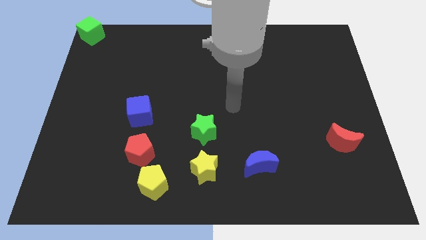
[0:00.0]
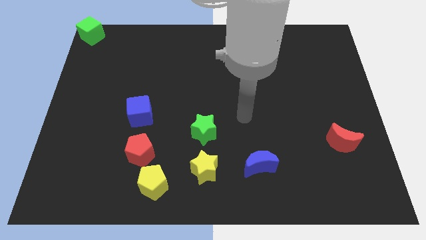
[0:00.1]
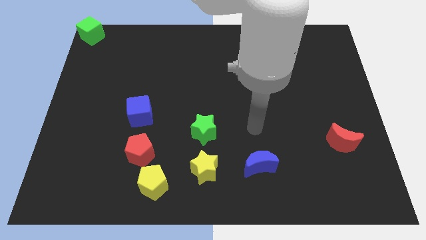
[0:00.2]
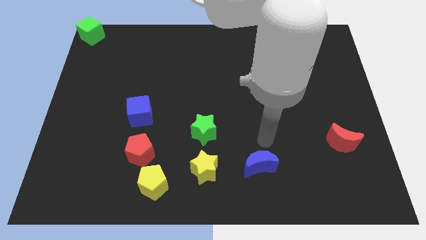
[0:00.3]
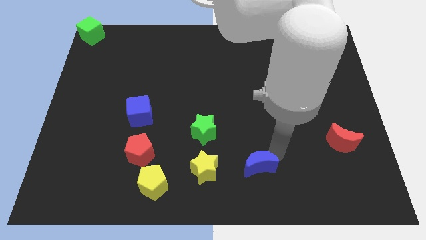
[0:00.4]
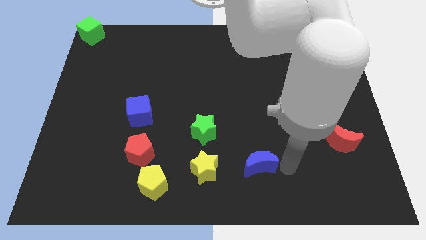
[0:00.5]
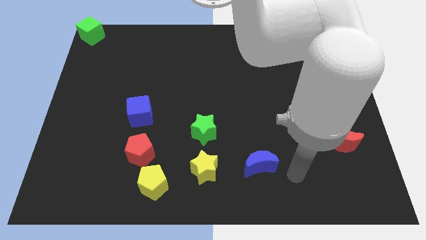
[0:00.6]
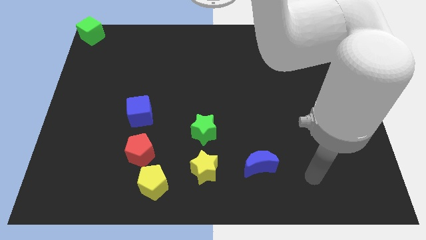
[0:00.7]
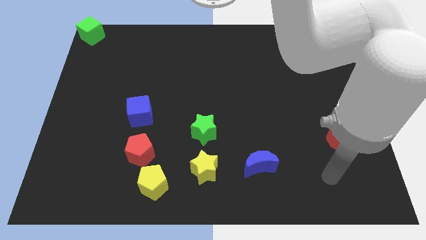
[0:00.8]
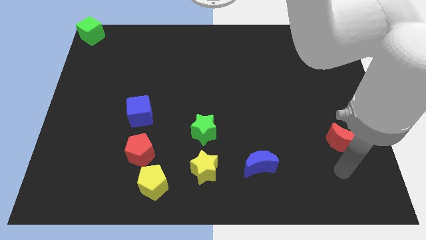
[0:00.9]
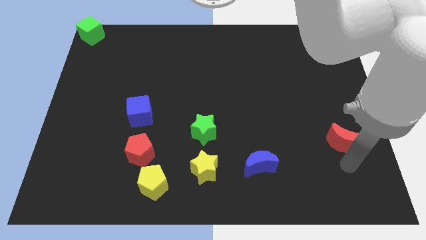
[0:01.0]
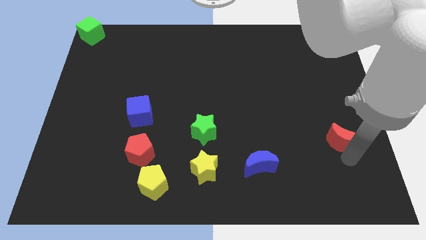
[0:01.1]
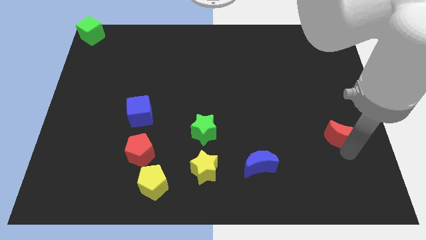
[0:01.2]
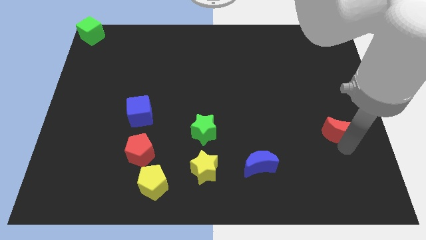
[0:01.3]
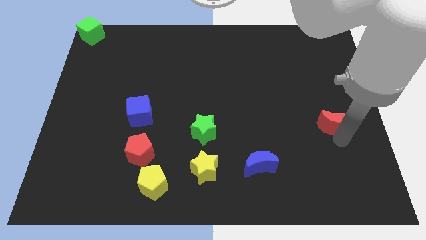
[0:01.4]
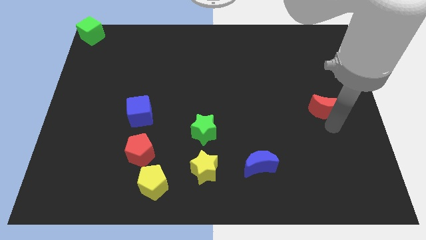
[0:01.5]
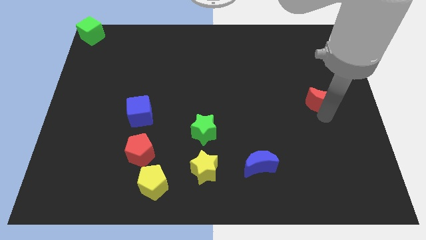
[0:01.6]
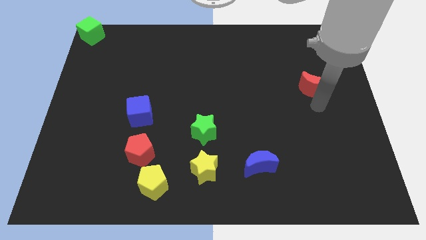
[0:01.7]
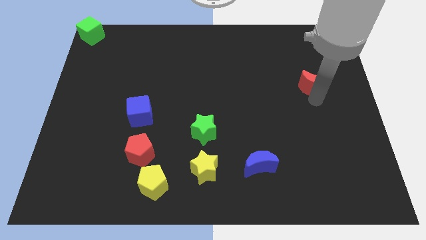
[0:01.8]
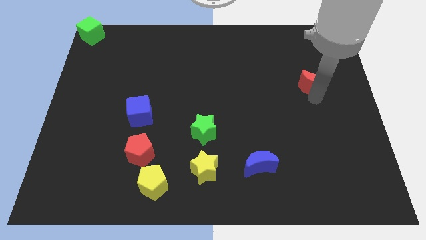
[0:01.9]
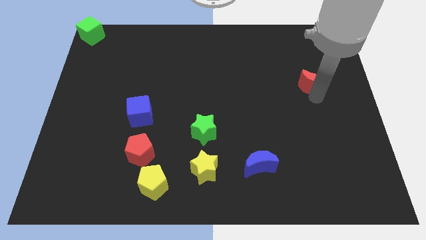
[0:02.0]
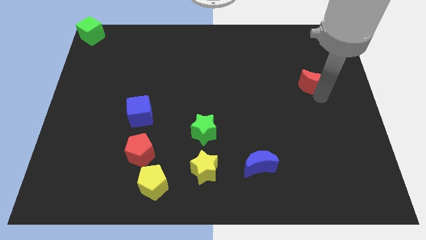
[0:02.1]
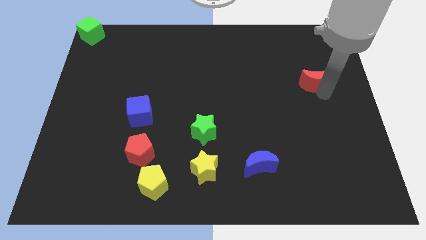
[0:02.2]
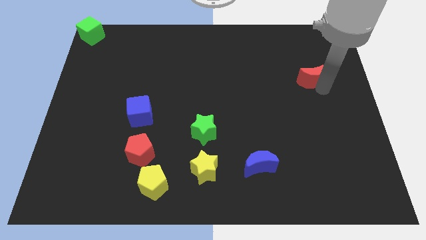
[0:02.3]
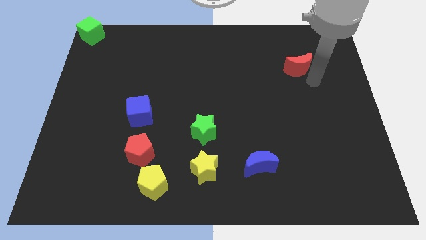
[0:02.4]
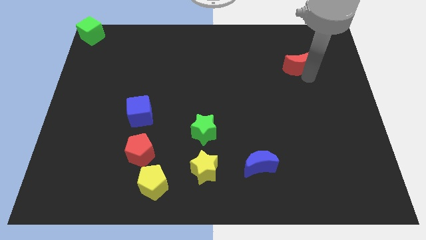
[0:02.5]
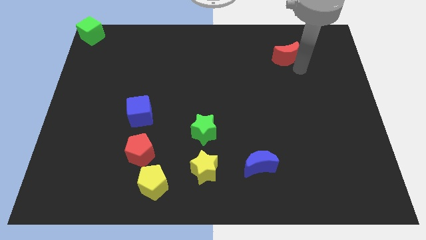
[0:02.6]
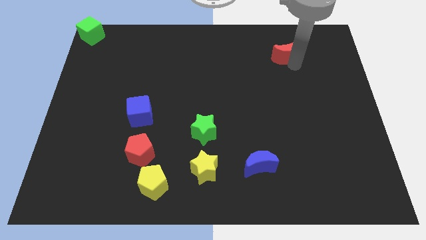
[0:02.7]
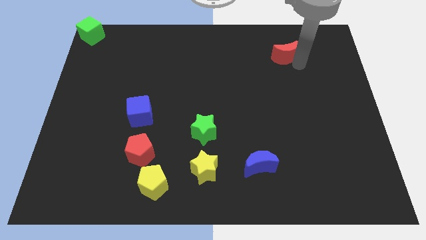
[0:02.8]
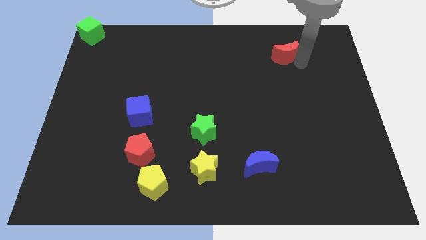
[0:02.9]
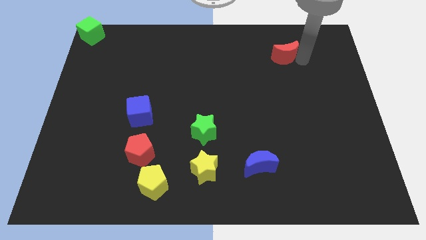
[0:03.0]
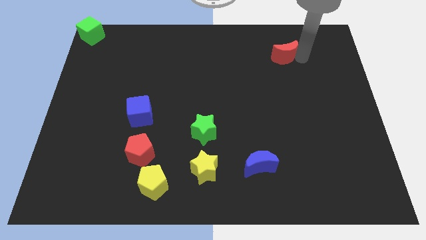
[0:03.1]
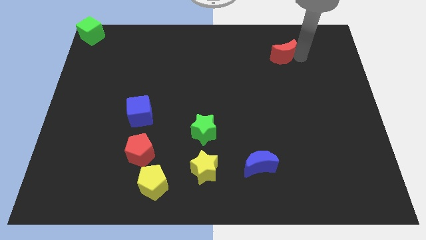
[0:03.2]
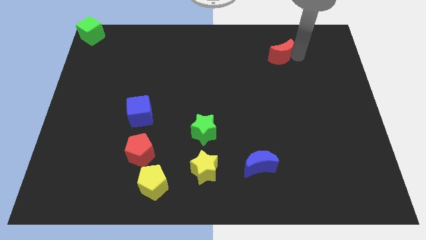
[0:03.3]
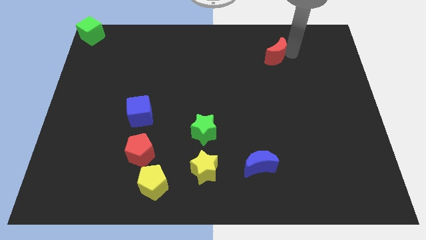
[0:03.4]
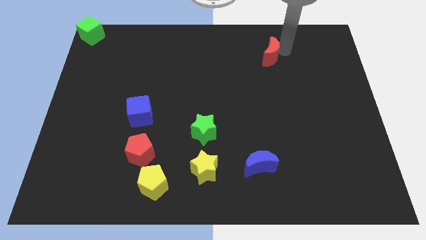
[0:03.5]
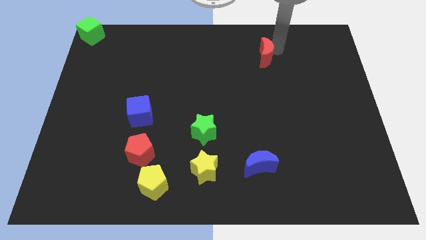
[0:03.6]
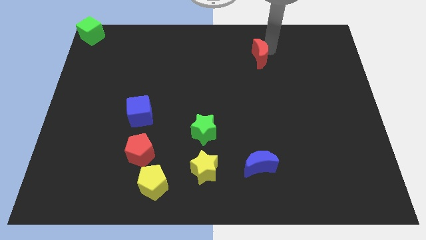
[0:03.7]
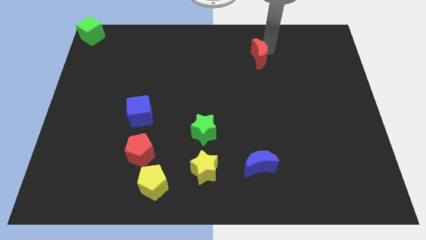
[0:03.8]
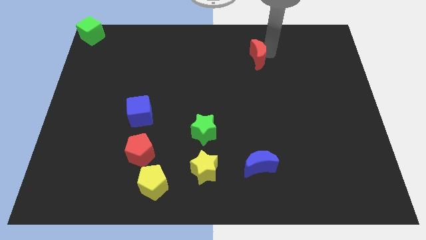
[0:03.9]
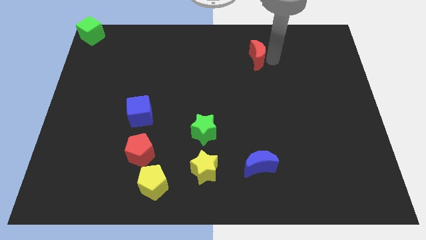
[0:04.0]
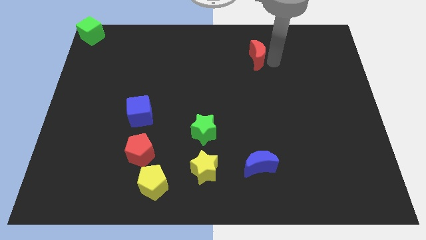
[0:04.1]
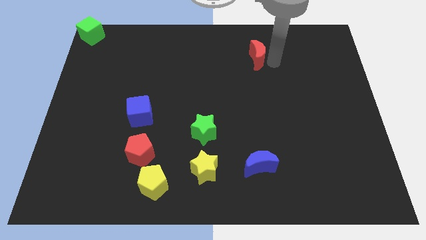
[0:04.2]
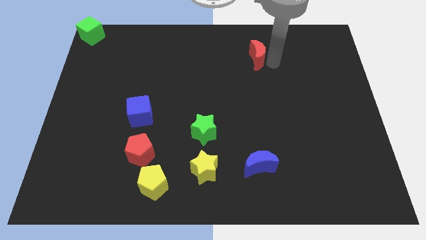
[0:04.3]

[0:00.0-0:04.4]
slide the red moon towards the top center

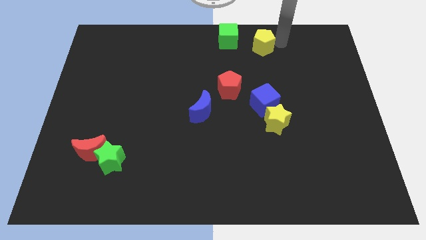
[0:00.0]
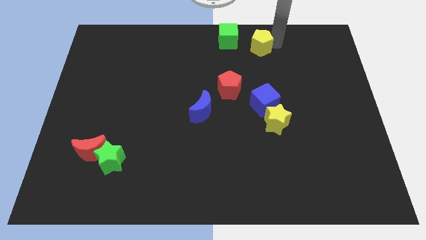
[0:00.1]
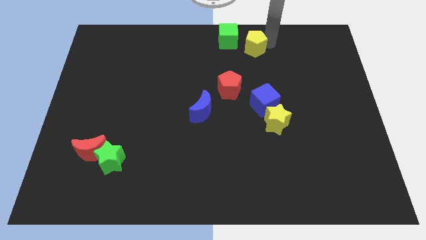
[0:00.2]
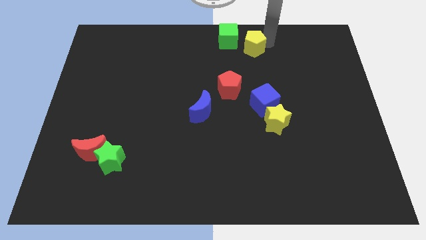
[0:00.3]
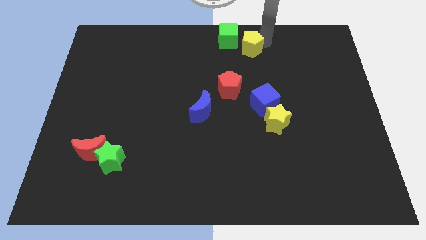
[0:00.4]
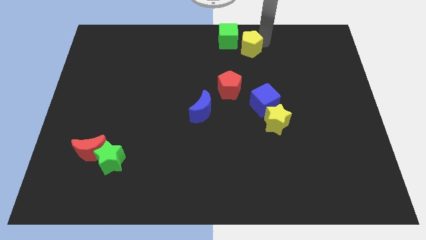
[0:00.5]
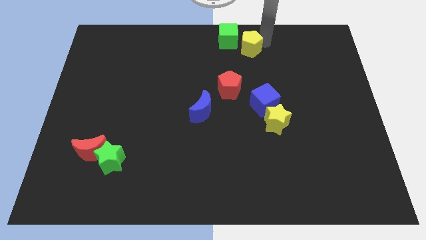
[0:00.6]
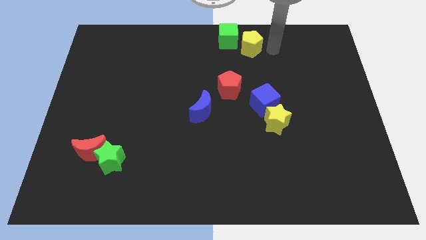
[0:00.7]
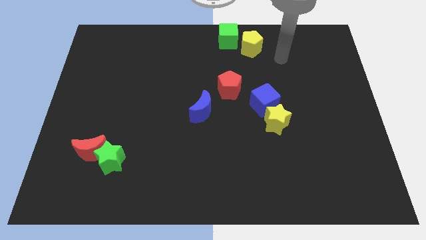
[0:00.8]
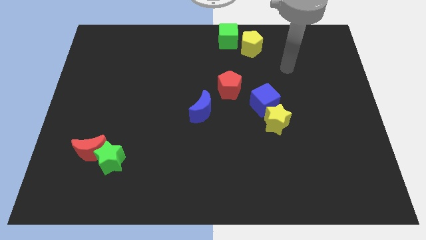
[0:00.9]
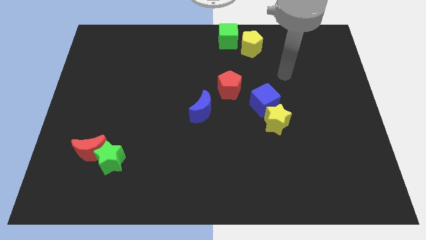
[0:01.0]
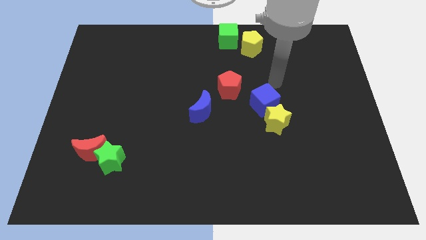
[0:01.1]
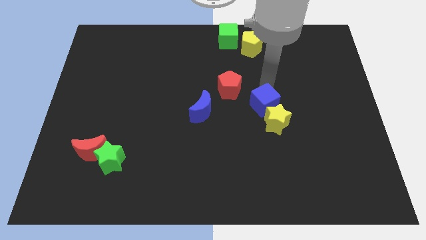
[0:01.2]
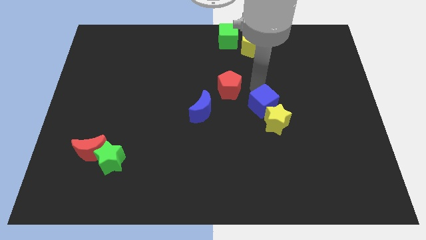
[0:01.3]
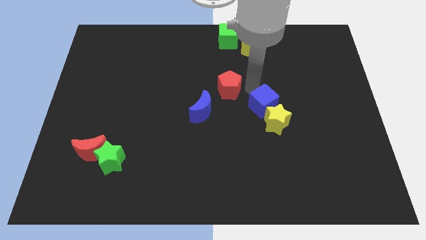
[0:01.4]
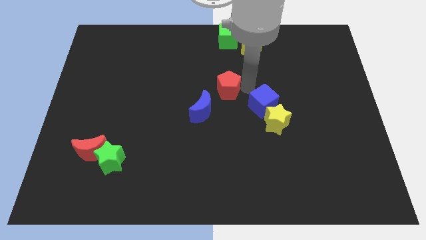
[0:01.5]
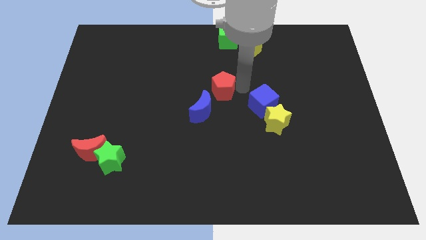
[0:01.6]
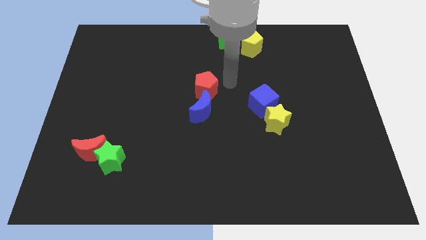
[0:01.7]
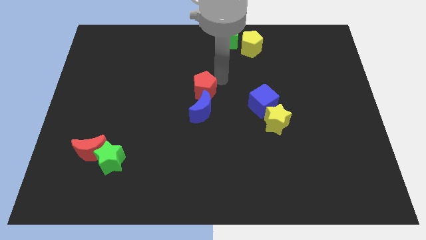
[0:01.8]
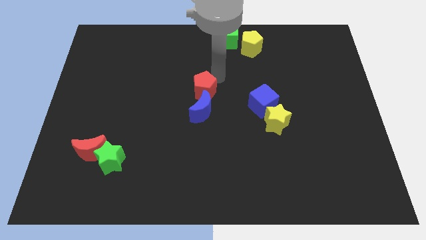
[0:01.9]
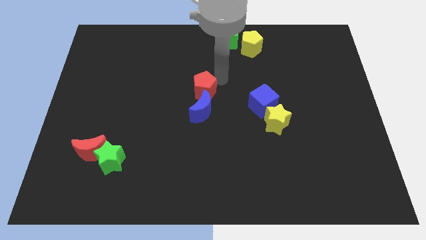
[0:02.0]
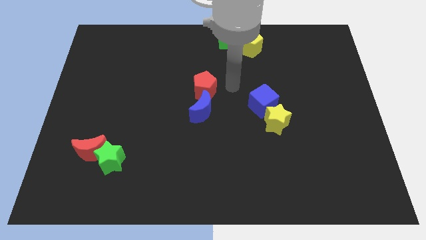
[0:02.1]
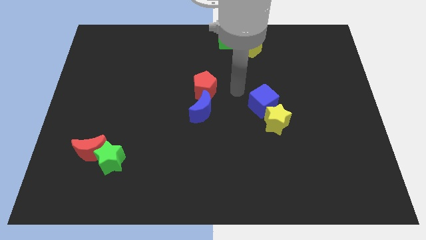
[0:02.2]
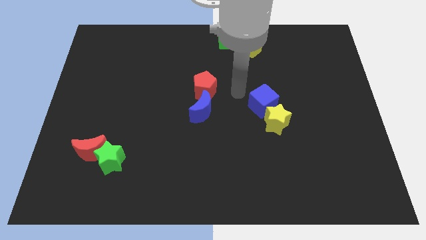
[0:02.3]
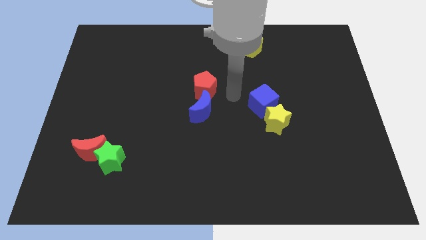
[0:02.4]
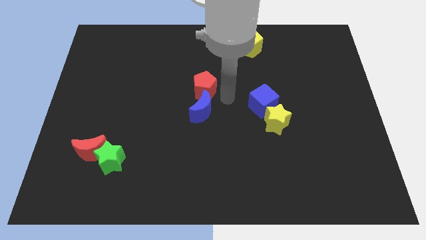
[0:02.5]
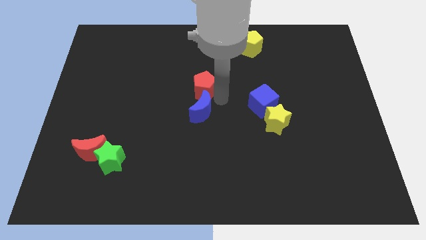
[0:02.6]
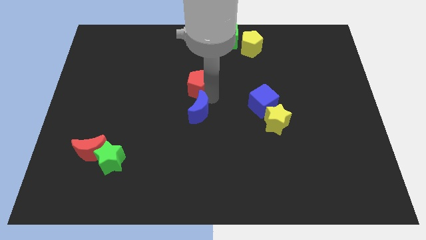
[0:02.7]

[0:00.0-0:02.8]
push red pentagon above blue crescent

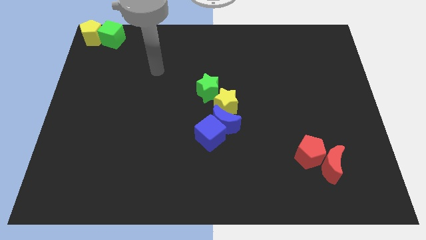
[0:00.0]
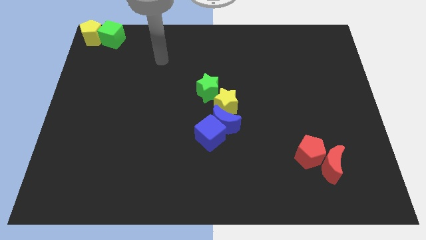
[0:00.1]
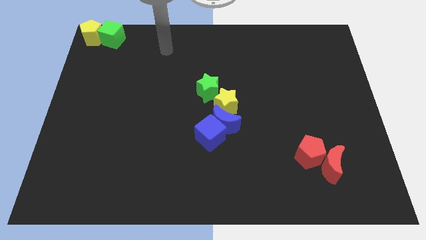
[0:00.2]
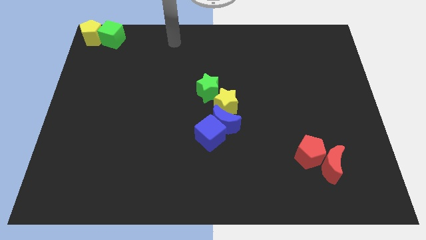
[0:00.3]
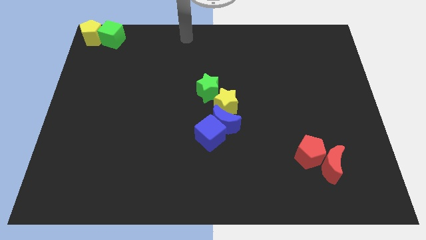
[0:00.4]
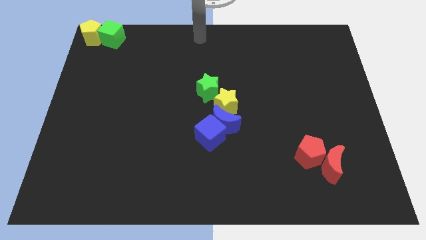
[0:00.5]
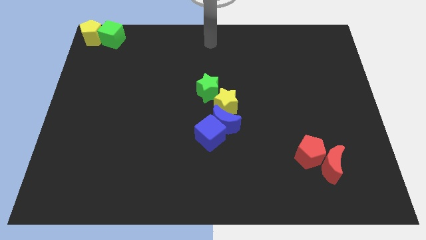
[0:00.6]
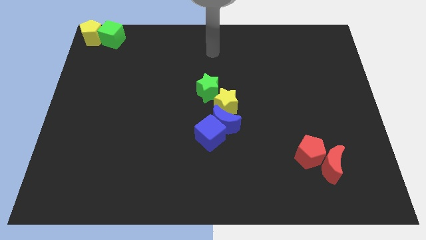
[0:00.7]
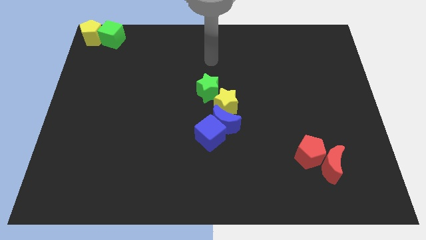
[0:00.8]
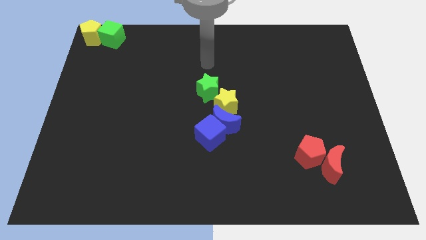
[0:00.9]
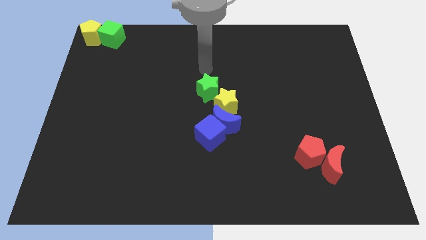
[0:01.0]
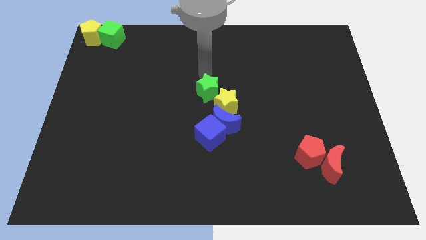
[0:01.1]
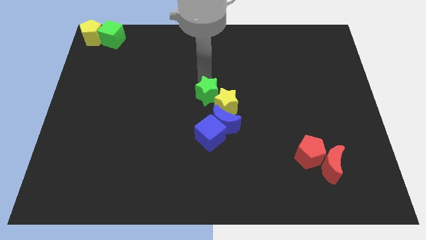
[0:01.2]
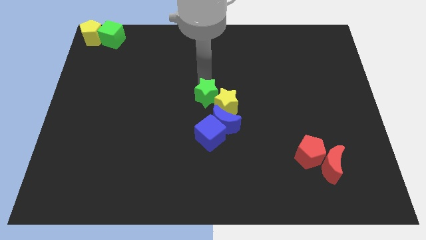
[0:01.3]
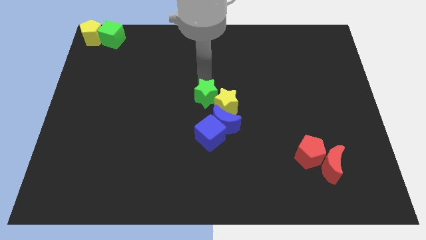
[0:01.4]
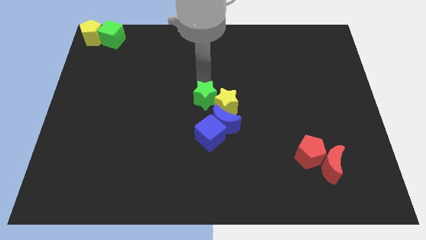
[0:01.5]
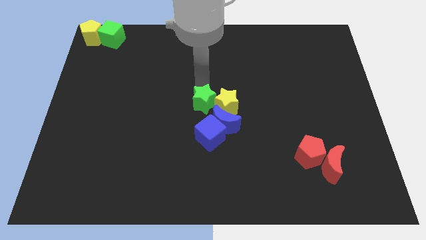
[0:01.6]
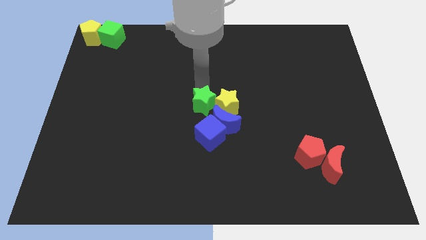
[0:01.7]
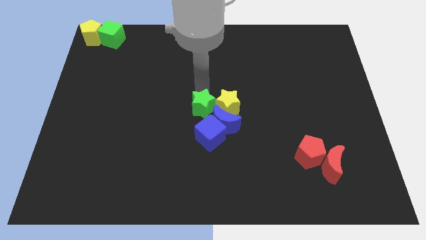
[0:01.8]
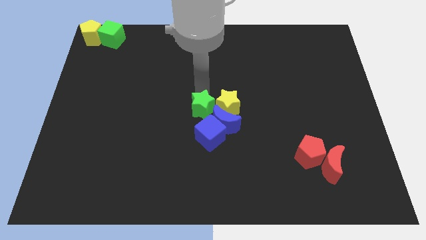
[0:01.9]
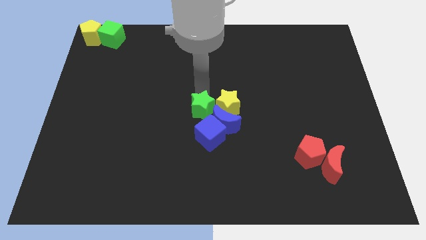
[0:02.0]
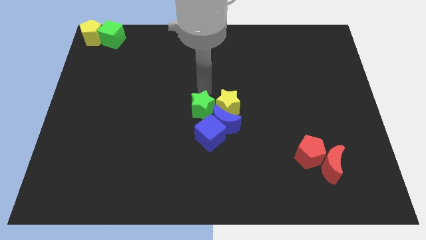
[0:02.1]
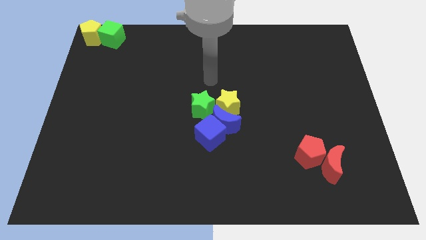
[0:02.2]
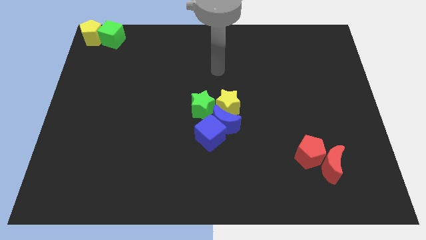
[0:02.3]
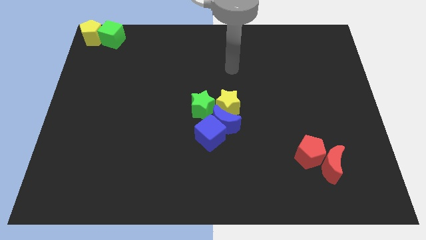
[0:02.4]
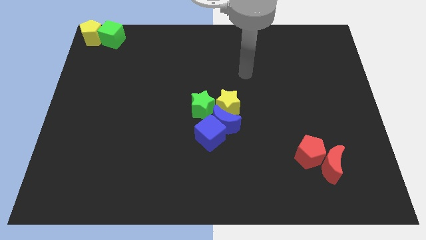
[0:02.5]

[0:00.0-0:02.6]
put the green star beside the yellow star with group of blocks
